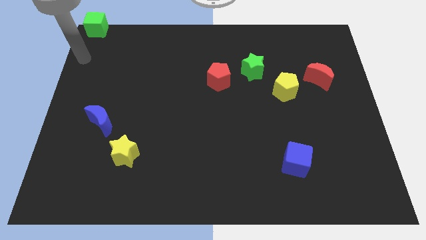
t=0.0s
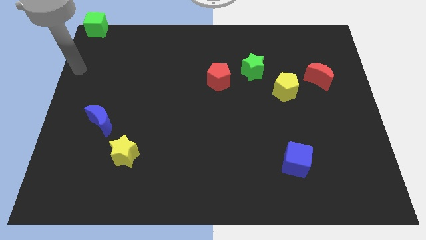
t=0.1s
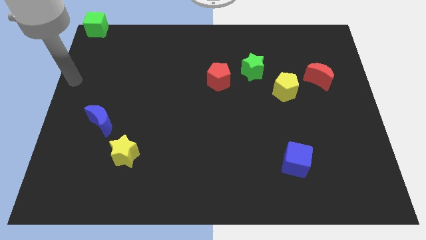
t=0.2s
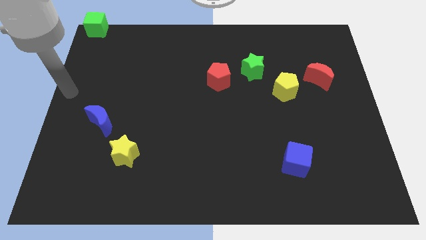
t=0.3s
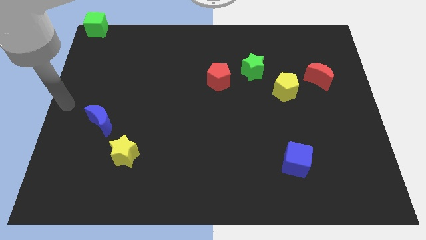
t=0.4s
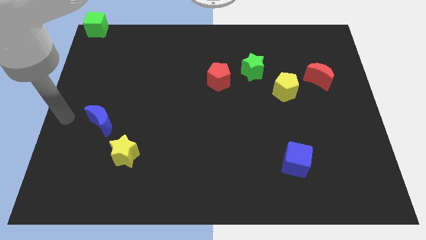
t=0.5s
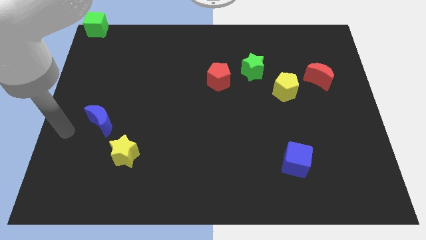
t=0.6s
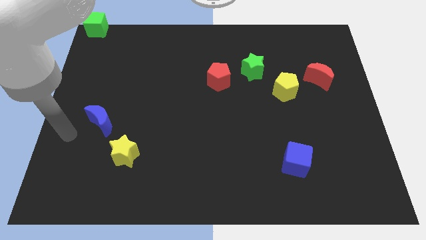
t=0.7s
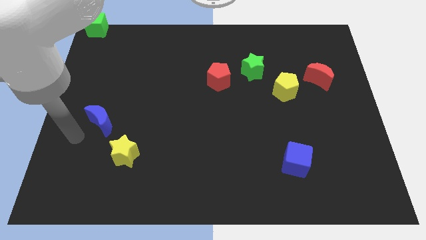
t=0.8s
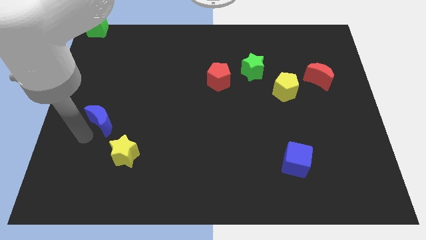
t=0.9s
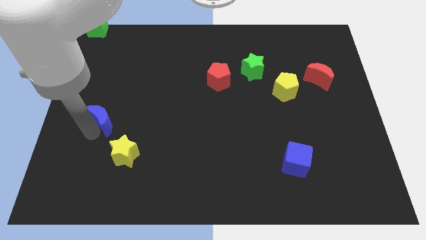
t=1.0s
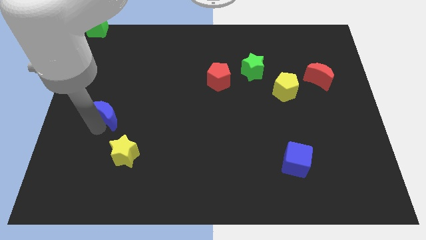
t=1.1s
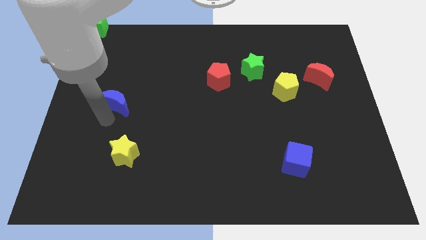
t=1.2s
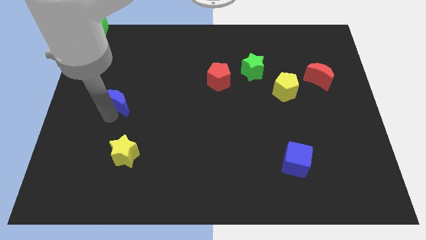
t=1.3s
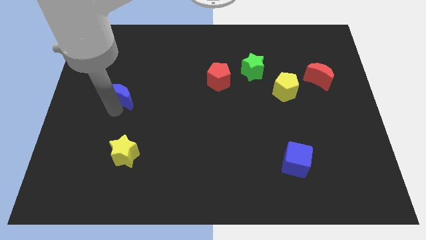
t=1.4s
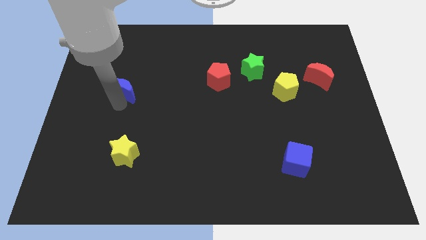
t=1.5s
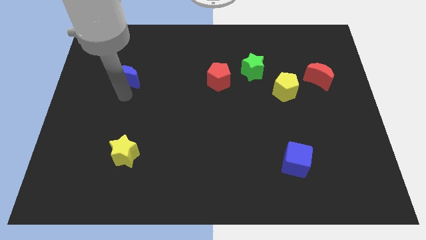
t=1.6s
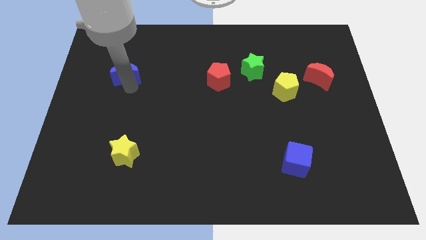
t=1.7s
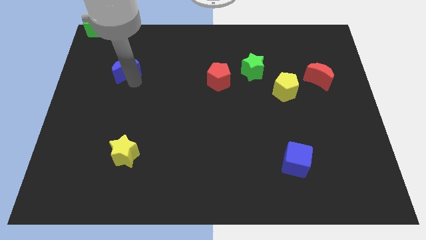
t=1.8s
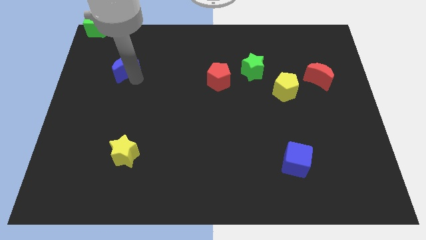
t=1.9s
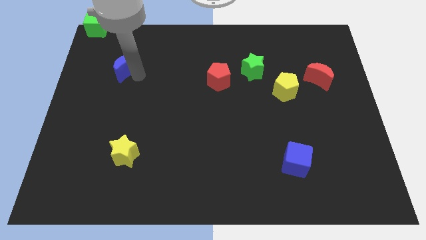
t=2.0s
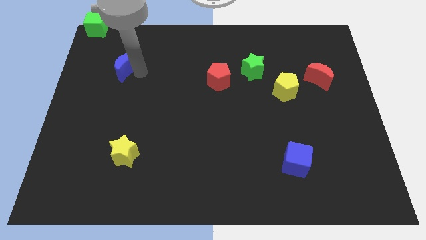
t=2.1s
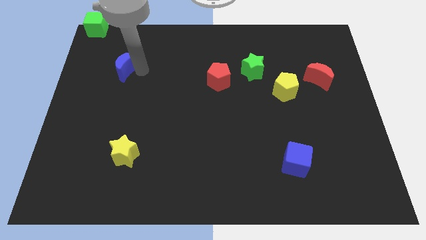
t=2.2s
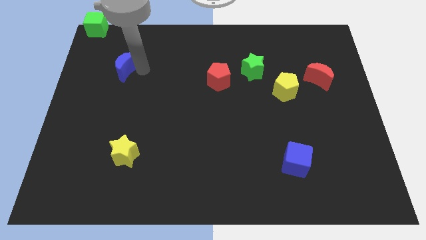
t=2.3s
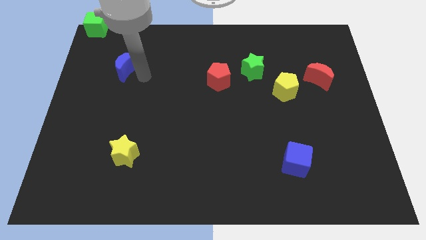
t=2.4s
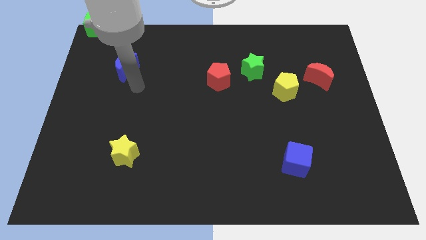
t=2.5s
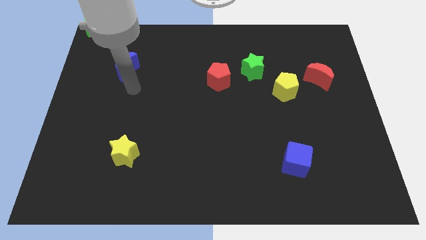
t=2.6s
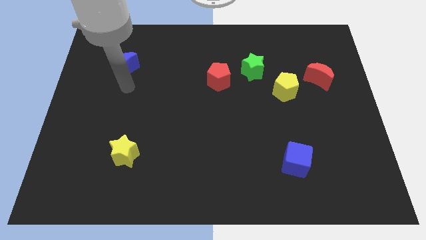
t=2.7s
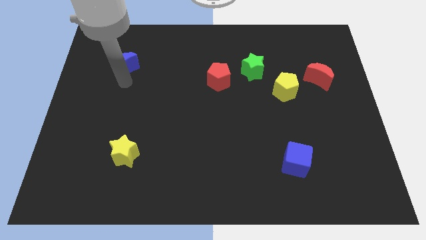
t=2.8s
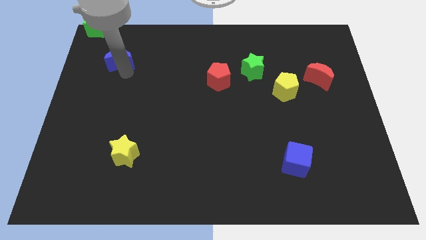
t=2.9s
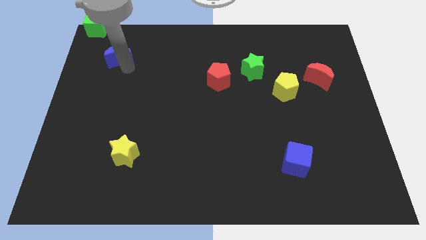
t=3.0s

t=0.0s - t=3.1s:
move the blue crescent away from the yellow star

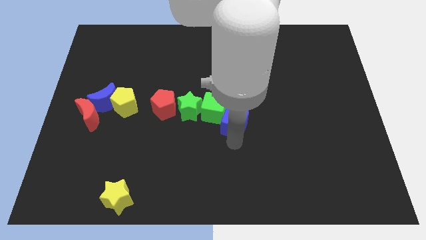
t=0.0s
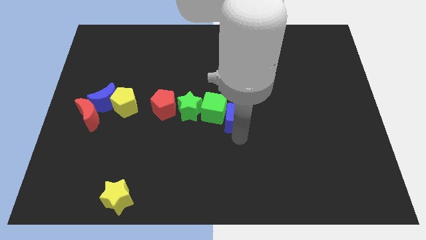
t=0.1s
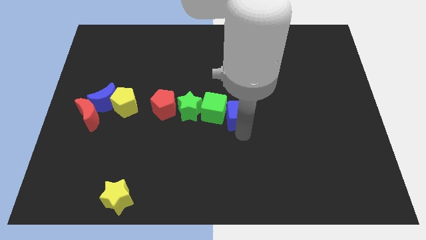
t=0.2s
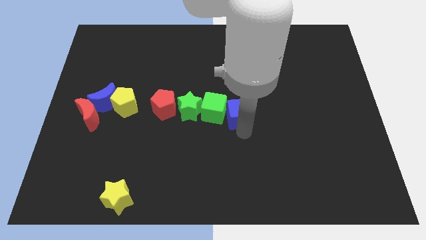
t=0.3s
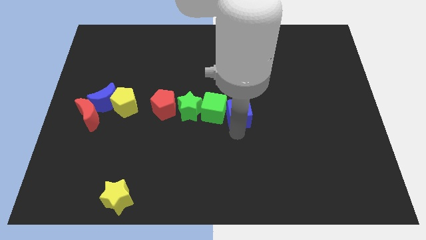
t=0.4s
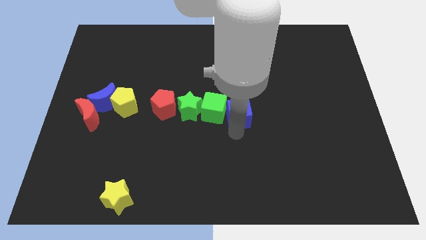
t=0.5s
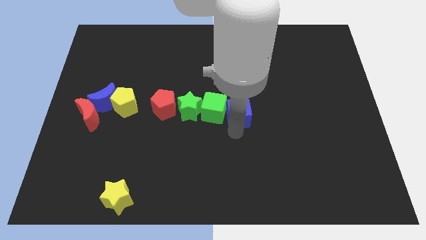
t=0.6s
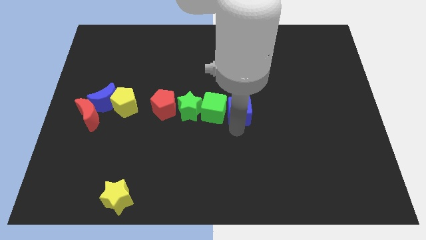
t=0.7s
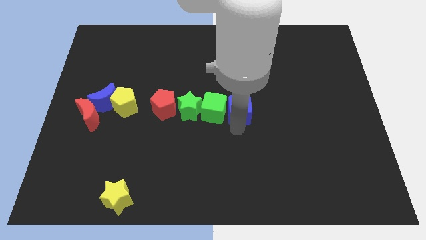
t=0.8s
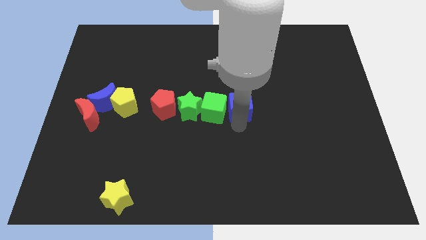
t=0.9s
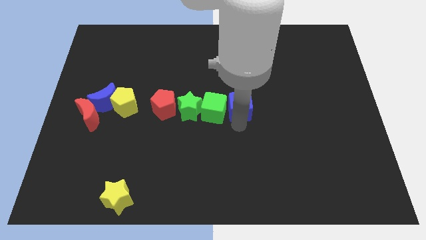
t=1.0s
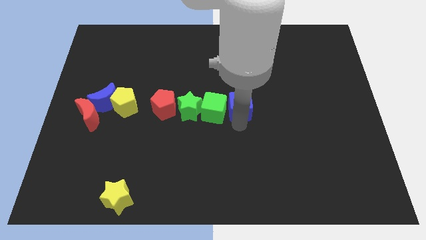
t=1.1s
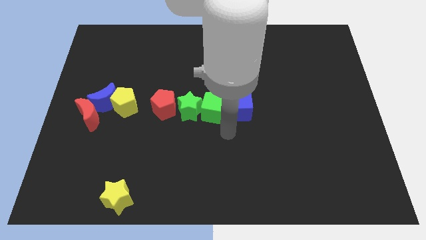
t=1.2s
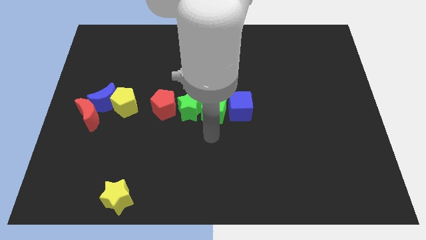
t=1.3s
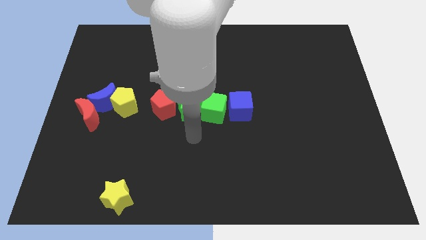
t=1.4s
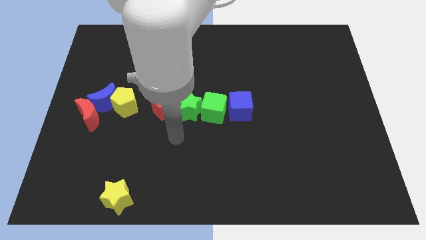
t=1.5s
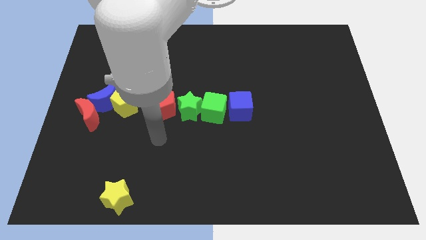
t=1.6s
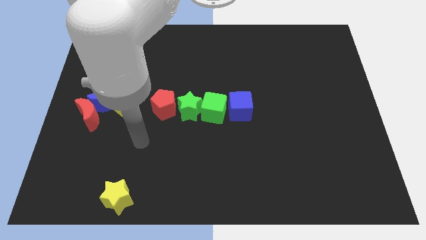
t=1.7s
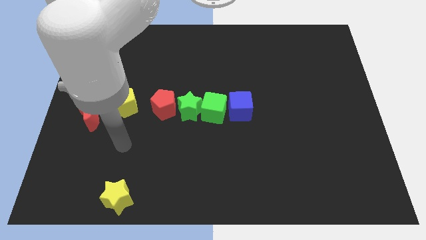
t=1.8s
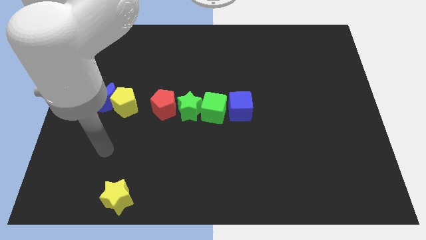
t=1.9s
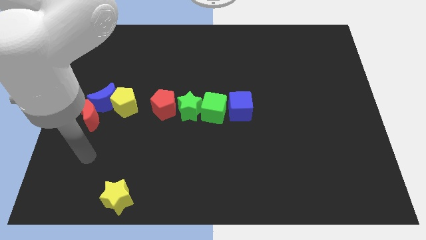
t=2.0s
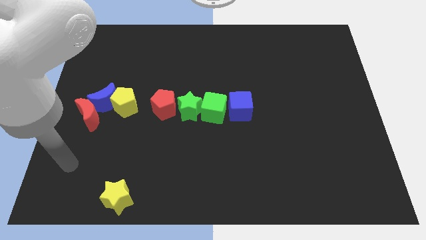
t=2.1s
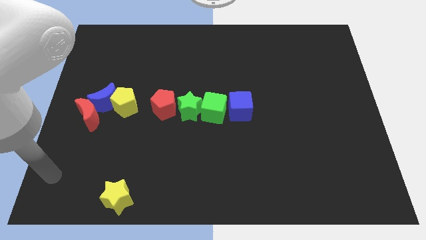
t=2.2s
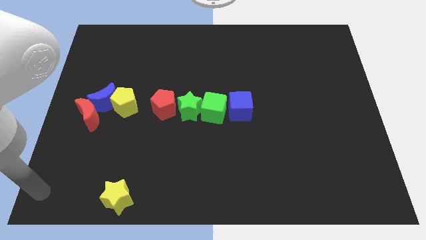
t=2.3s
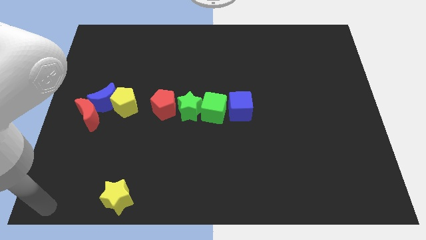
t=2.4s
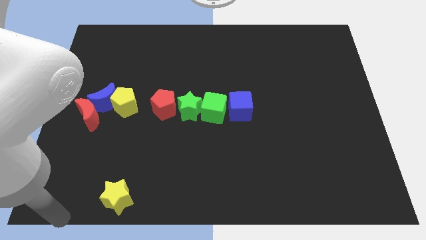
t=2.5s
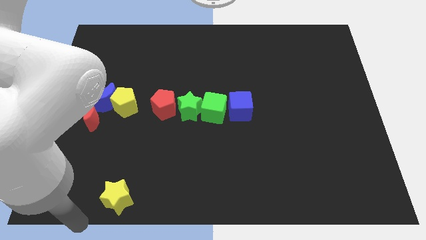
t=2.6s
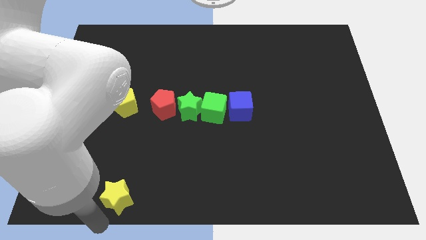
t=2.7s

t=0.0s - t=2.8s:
place the arm to the left of the yellow star

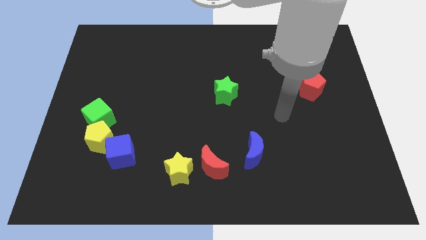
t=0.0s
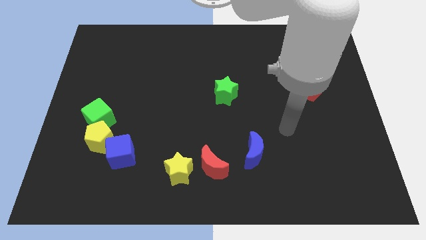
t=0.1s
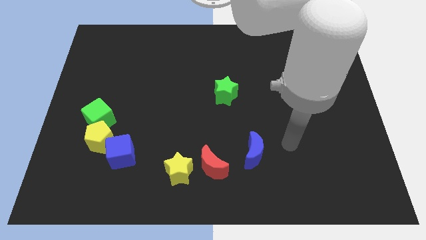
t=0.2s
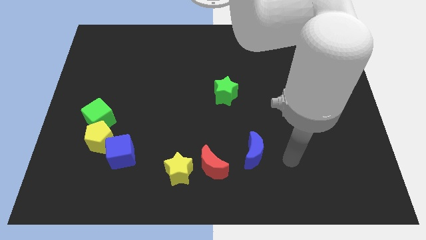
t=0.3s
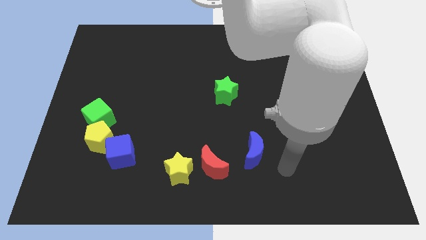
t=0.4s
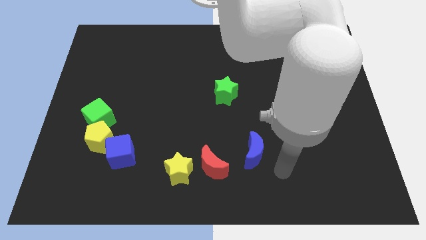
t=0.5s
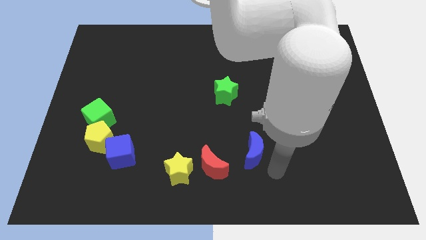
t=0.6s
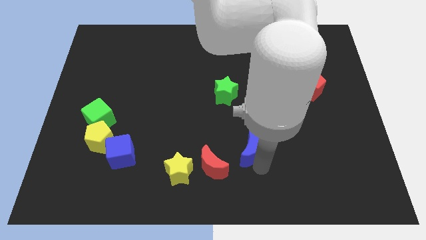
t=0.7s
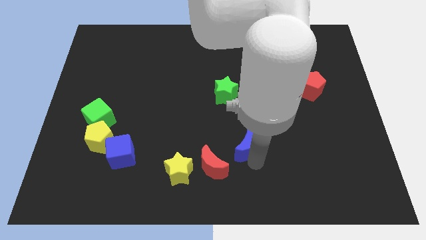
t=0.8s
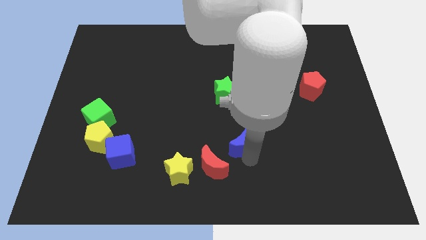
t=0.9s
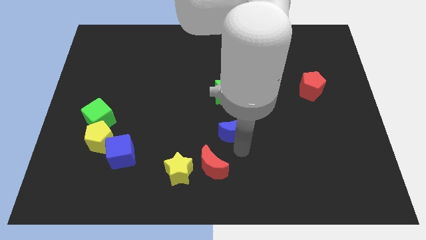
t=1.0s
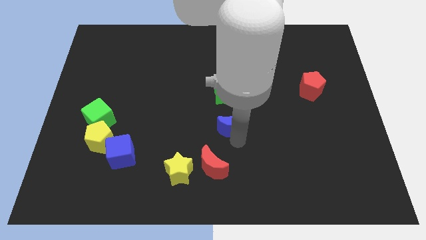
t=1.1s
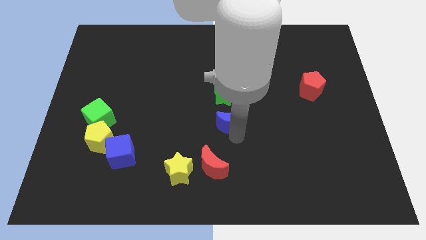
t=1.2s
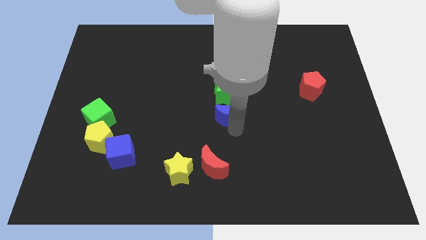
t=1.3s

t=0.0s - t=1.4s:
place the blue moon to the bottom side of the green star

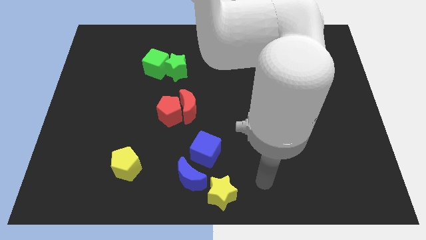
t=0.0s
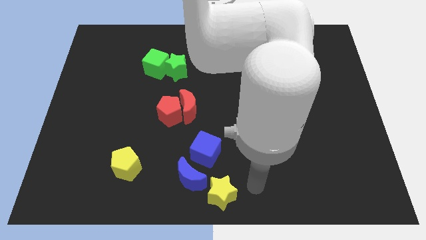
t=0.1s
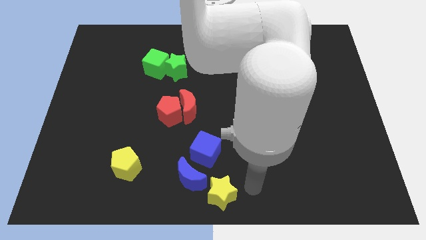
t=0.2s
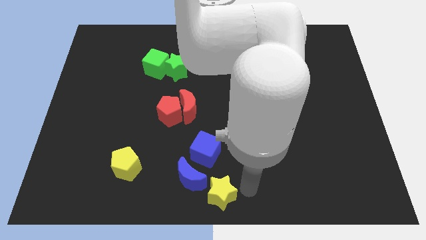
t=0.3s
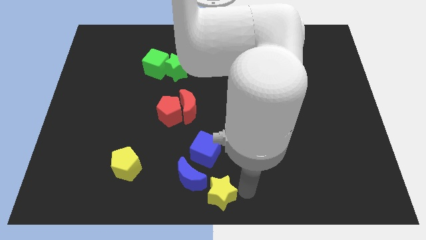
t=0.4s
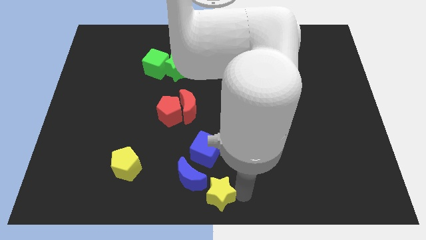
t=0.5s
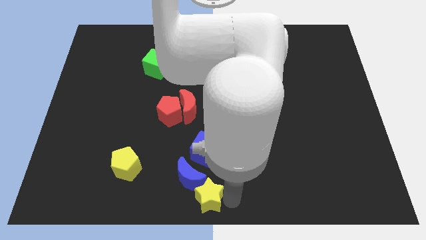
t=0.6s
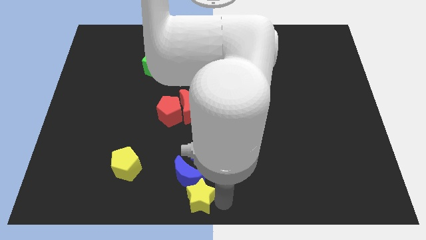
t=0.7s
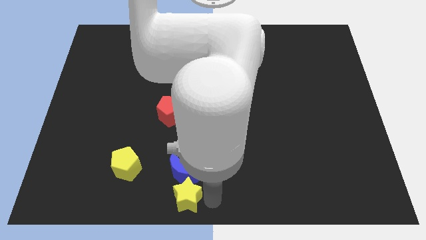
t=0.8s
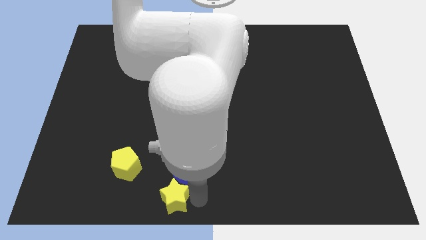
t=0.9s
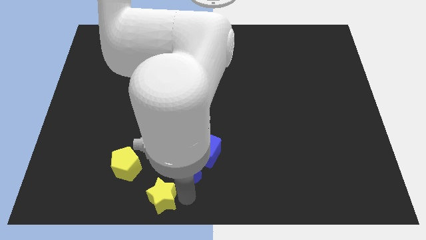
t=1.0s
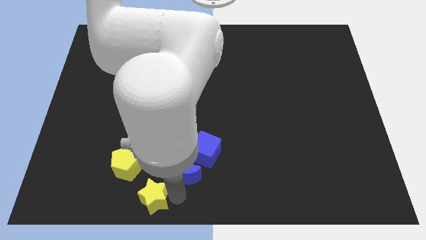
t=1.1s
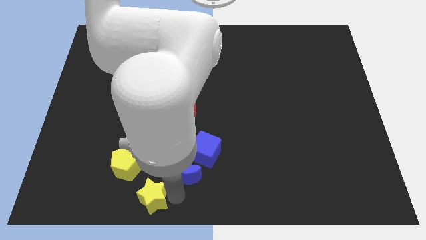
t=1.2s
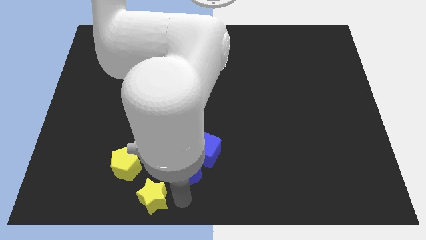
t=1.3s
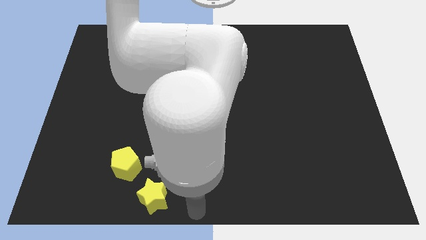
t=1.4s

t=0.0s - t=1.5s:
push the yellow star towards the yellow pentagon

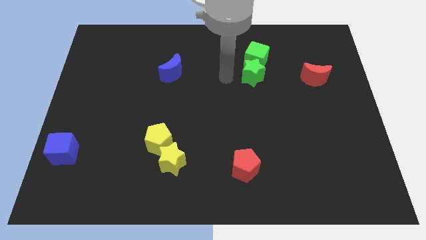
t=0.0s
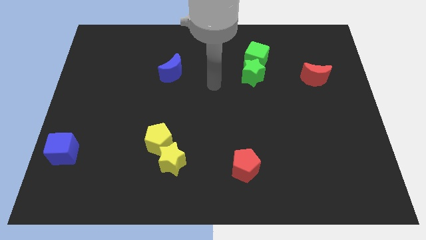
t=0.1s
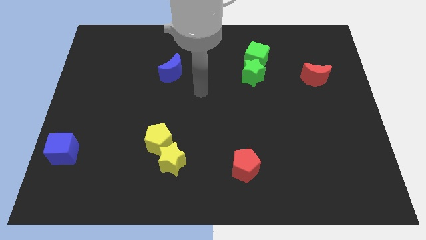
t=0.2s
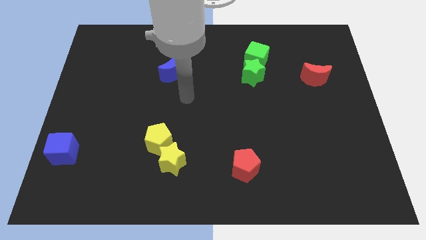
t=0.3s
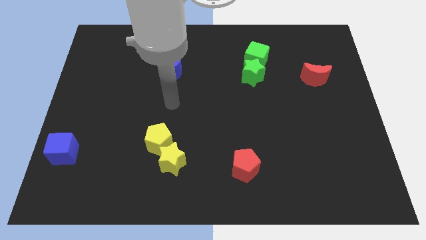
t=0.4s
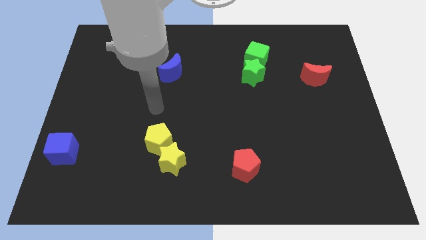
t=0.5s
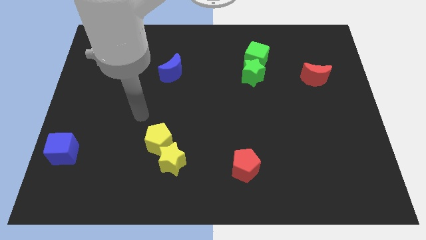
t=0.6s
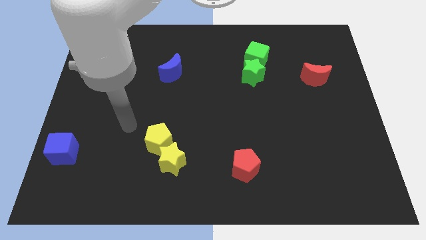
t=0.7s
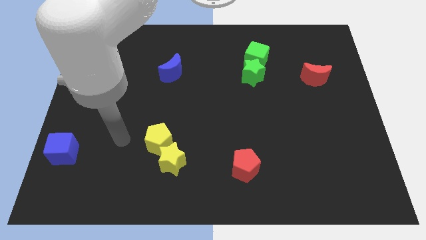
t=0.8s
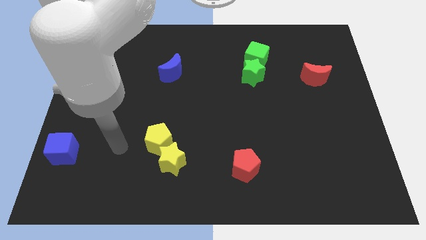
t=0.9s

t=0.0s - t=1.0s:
point your hand at the left side of the yellow pentagon
